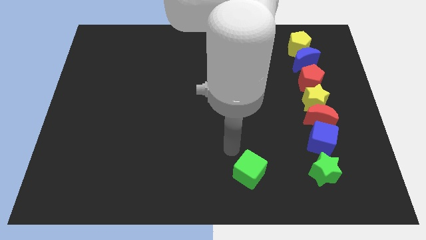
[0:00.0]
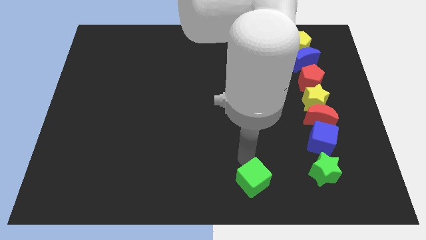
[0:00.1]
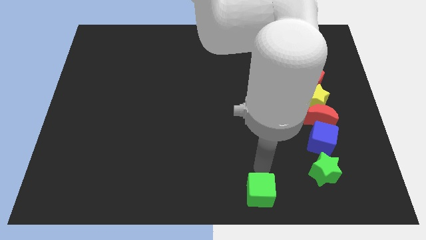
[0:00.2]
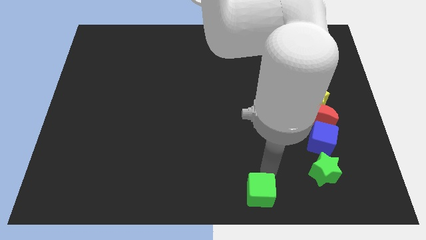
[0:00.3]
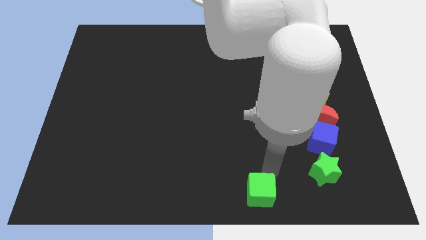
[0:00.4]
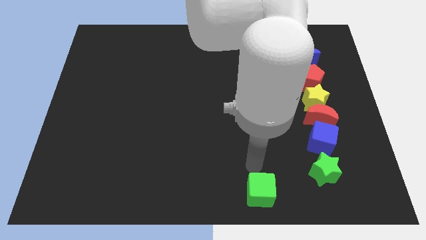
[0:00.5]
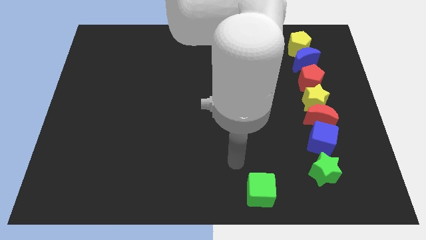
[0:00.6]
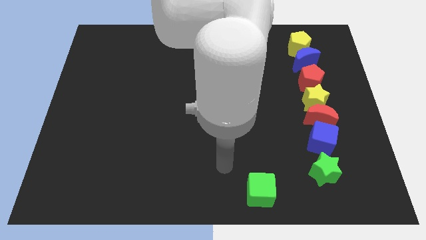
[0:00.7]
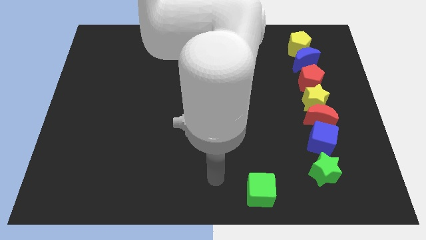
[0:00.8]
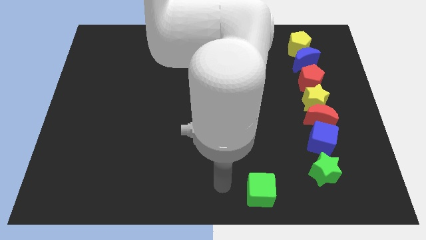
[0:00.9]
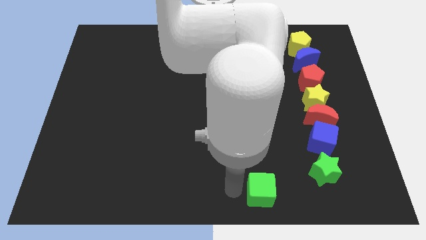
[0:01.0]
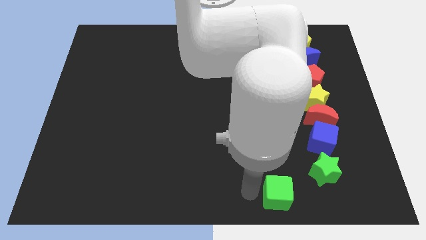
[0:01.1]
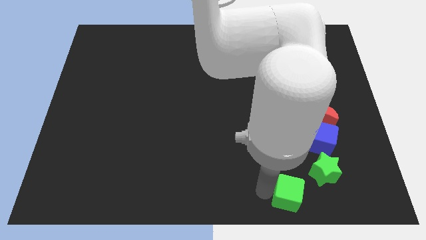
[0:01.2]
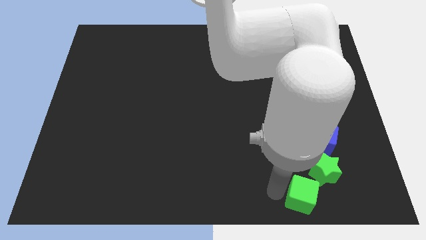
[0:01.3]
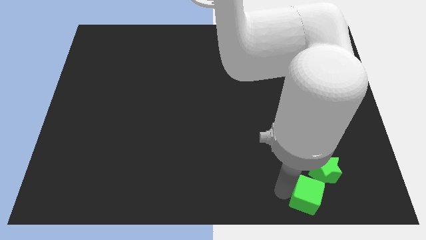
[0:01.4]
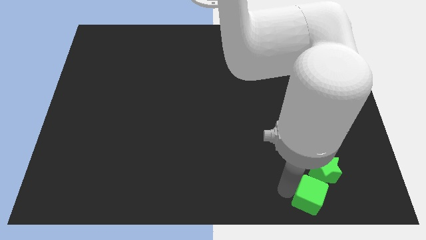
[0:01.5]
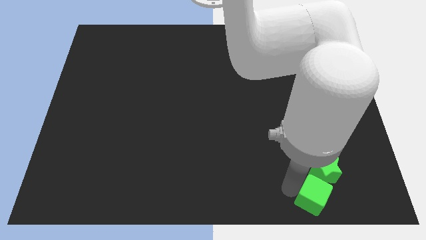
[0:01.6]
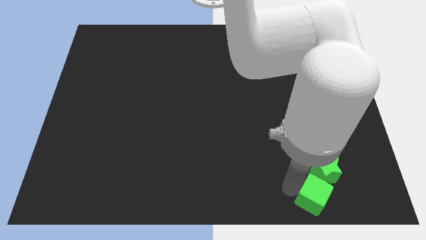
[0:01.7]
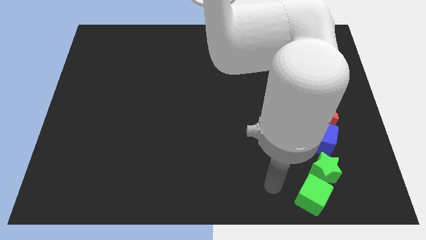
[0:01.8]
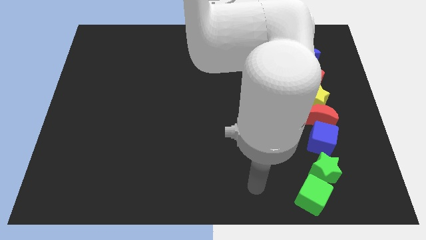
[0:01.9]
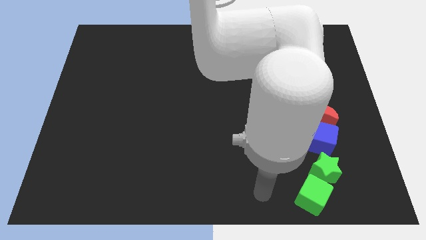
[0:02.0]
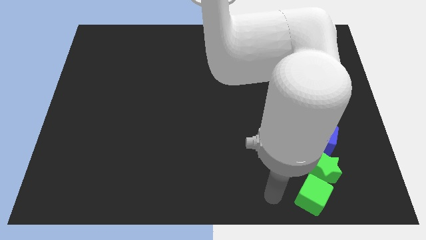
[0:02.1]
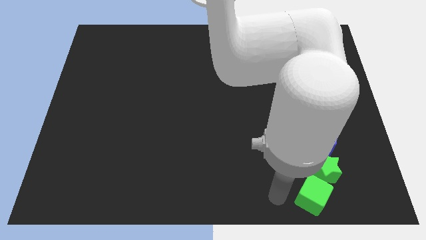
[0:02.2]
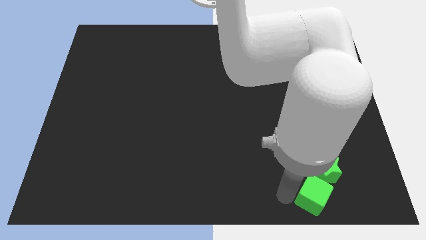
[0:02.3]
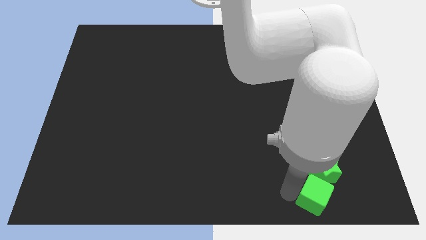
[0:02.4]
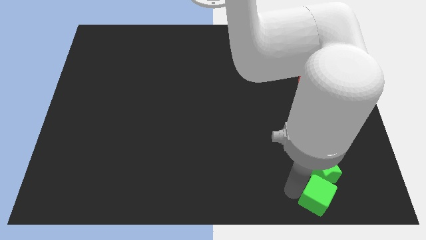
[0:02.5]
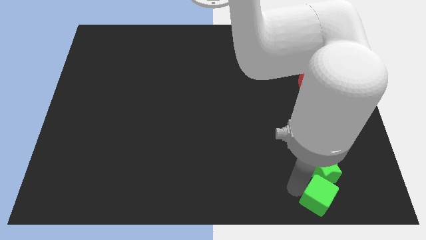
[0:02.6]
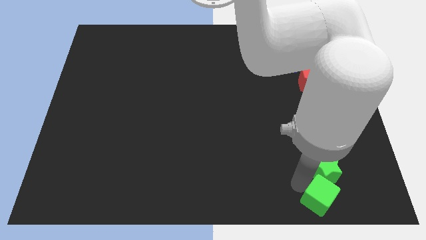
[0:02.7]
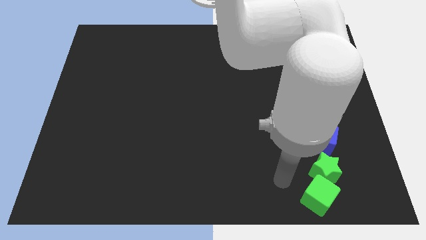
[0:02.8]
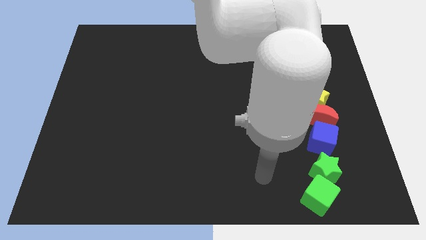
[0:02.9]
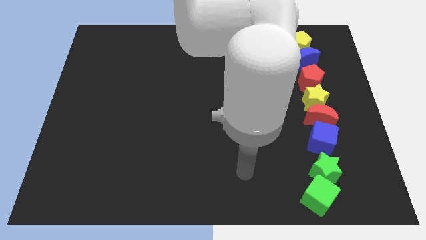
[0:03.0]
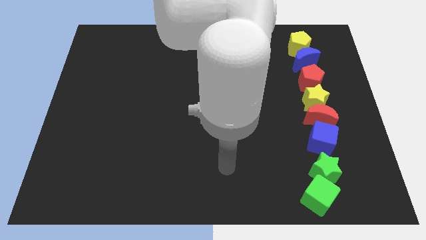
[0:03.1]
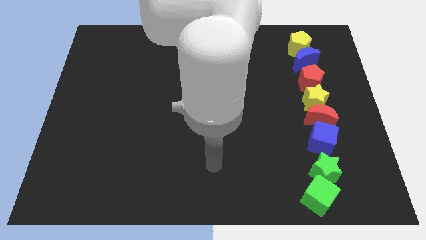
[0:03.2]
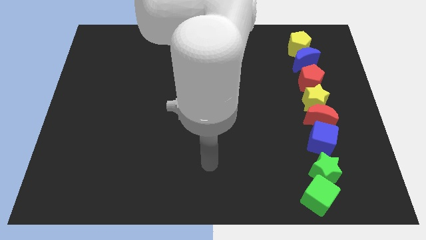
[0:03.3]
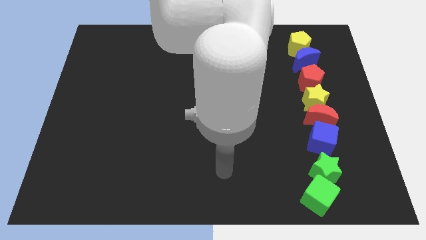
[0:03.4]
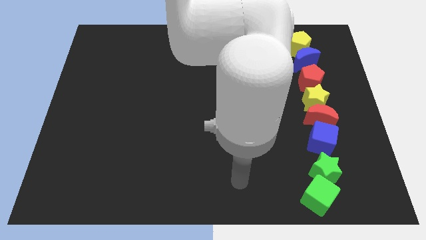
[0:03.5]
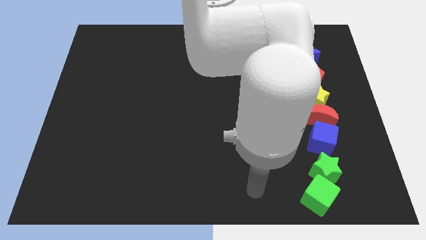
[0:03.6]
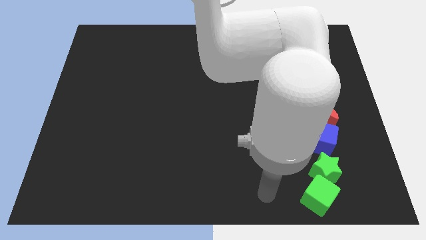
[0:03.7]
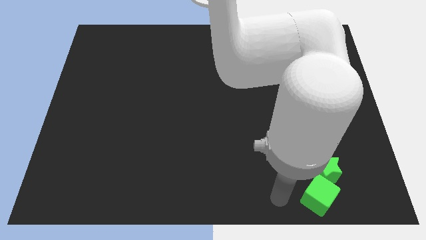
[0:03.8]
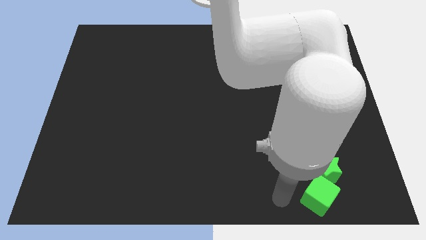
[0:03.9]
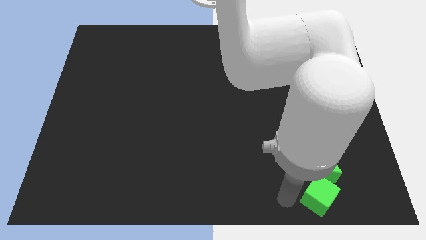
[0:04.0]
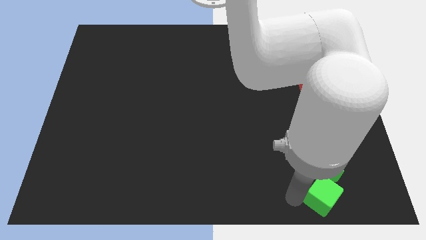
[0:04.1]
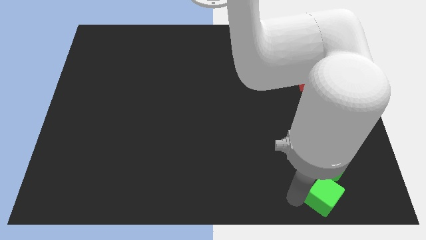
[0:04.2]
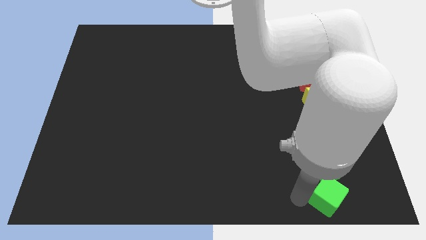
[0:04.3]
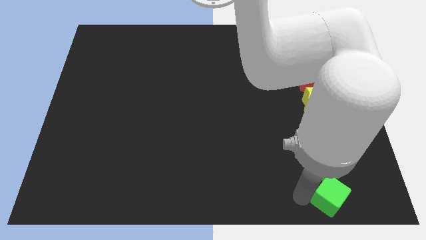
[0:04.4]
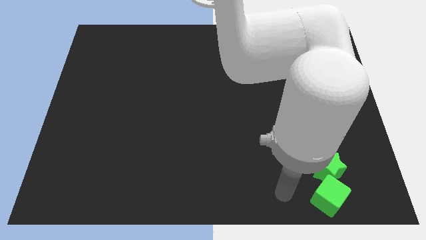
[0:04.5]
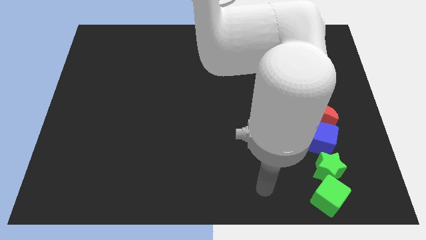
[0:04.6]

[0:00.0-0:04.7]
place the green cube below the green star to form a vertical line
